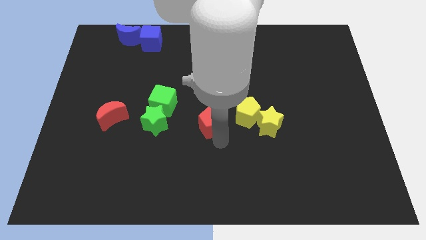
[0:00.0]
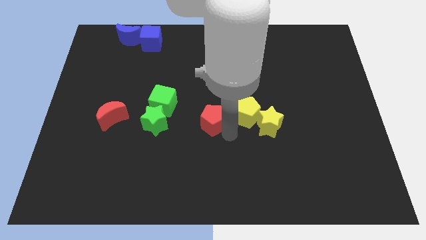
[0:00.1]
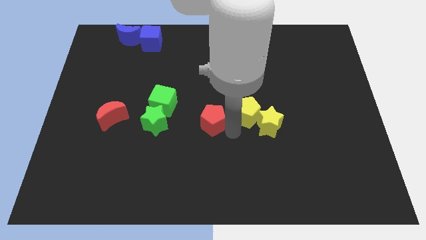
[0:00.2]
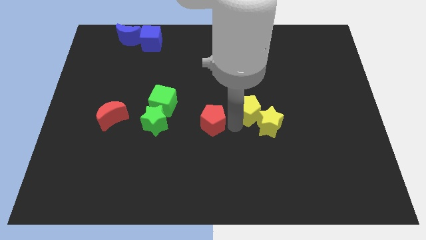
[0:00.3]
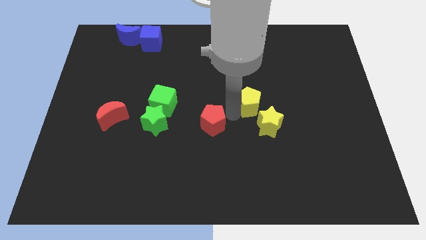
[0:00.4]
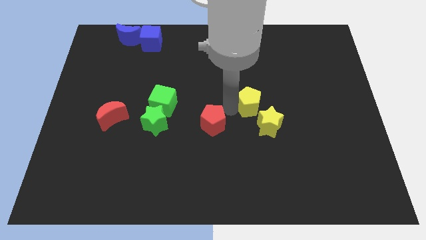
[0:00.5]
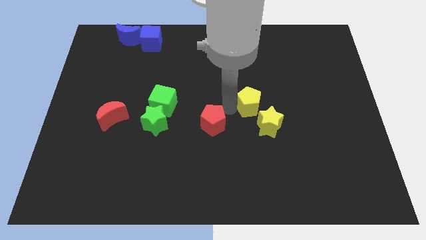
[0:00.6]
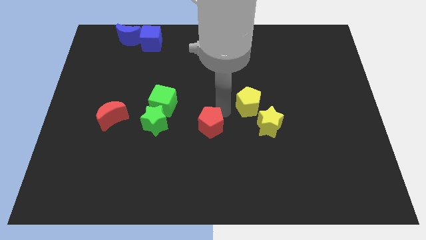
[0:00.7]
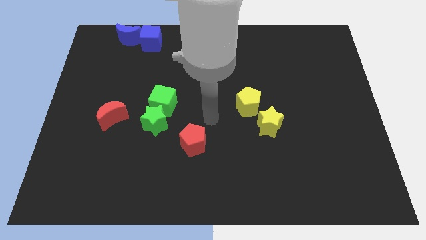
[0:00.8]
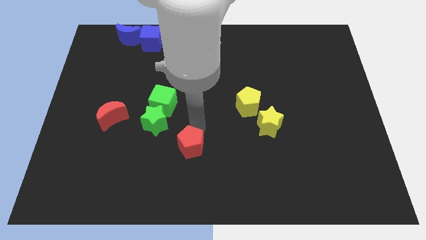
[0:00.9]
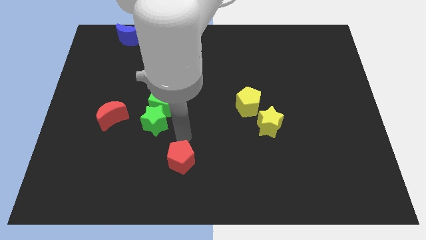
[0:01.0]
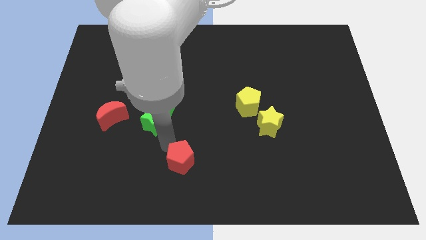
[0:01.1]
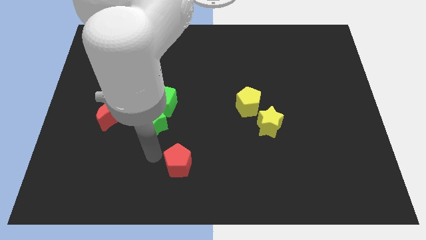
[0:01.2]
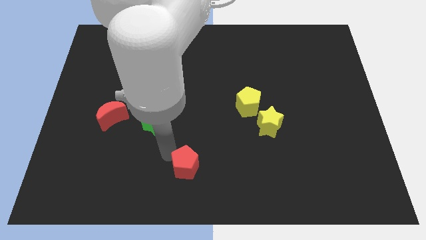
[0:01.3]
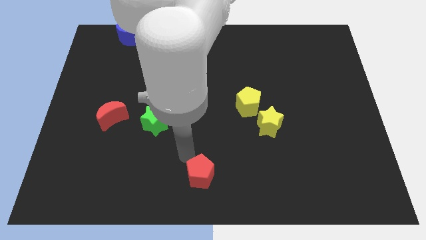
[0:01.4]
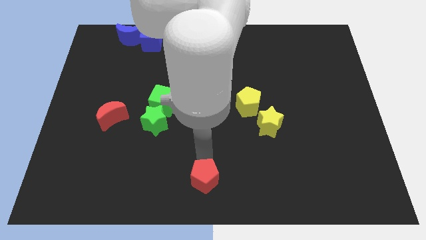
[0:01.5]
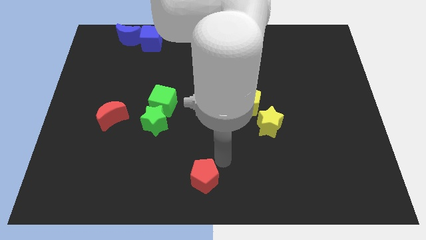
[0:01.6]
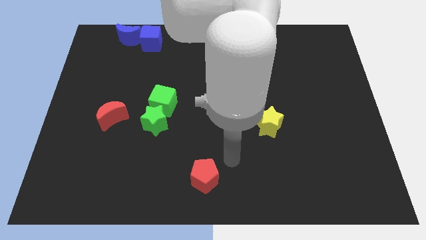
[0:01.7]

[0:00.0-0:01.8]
push the red pentagon towards the bottom center of the board

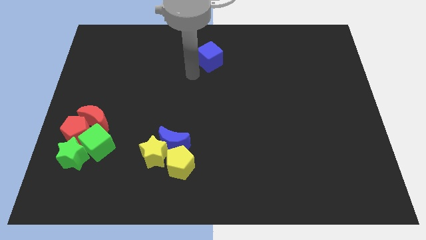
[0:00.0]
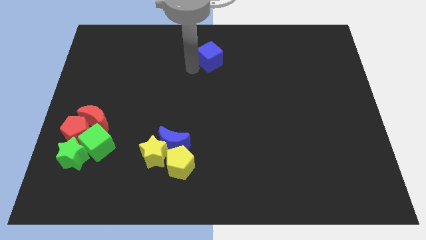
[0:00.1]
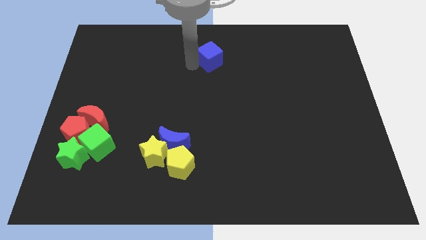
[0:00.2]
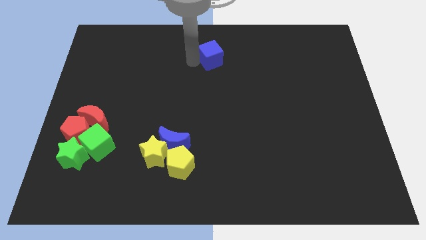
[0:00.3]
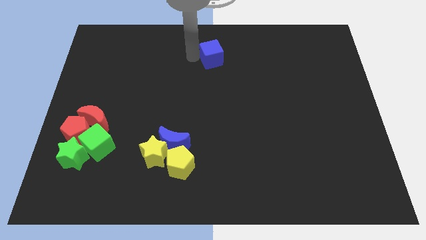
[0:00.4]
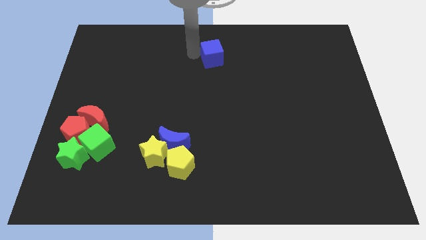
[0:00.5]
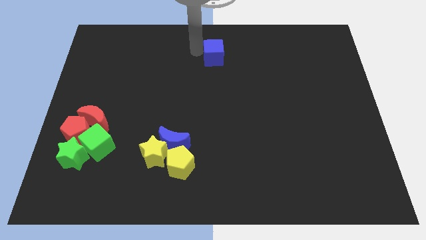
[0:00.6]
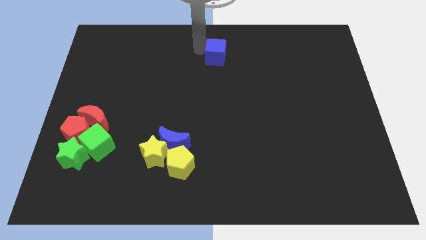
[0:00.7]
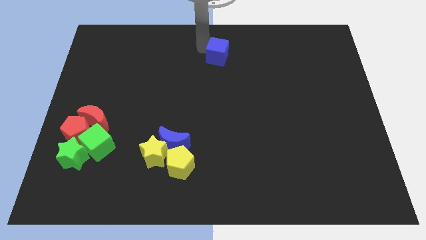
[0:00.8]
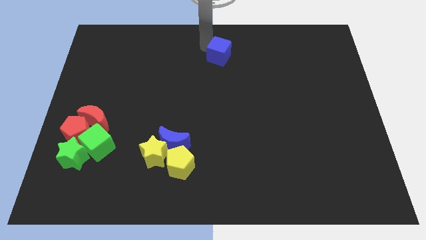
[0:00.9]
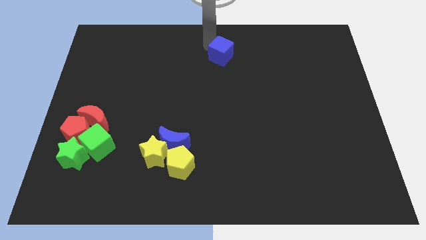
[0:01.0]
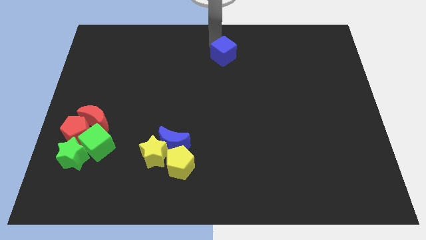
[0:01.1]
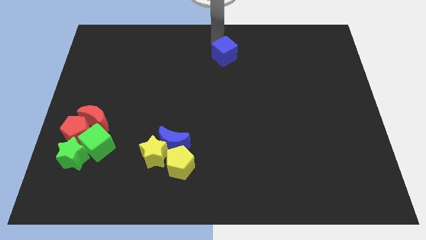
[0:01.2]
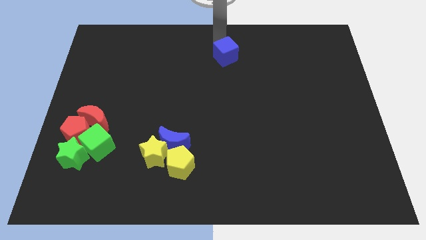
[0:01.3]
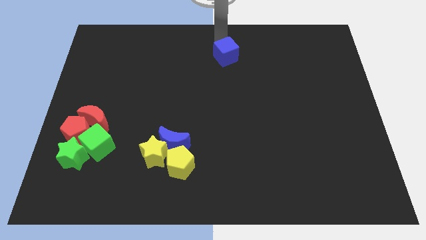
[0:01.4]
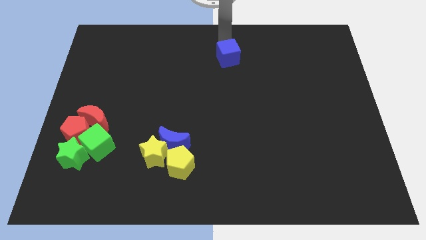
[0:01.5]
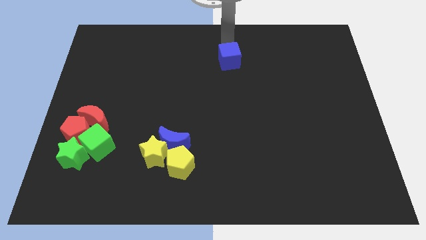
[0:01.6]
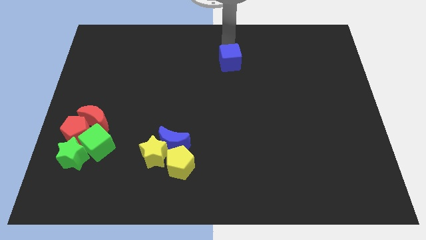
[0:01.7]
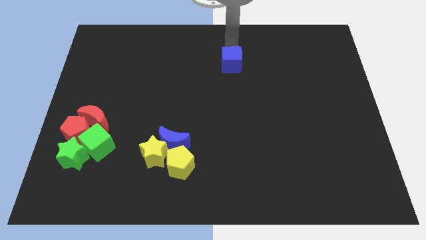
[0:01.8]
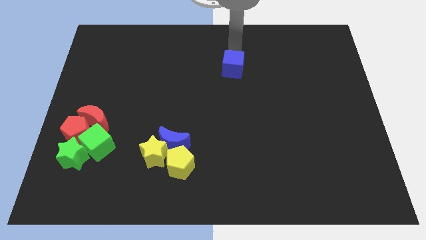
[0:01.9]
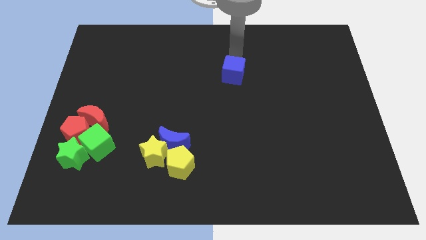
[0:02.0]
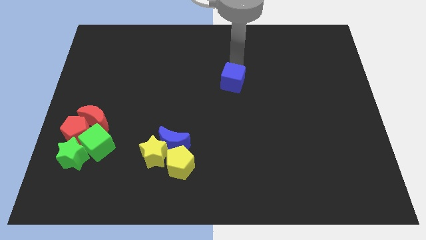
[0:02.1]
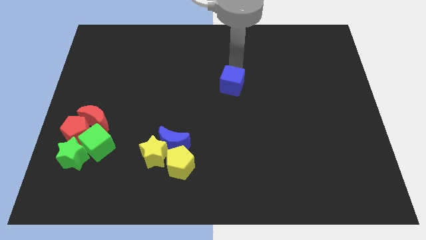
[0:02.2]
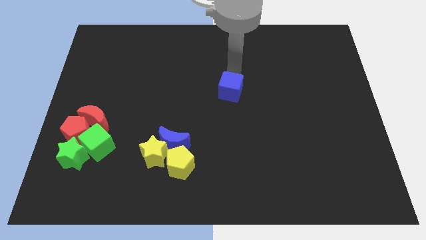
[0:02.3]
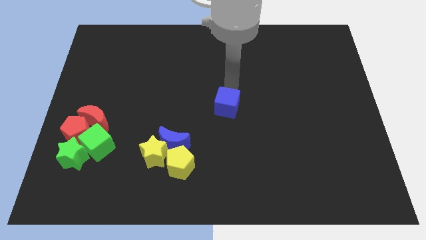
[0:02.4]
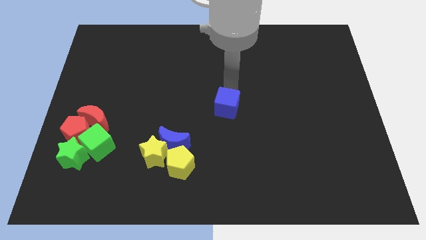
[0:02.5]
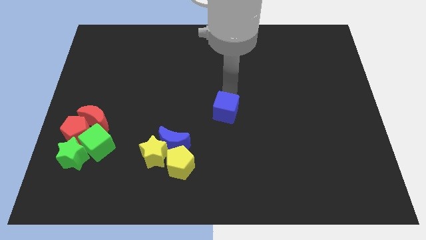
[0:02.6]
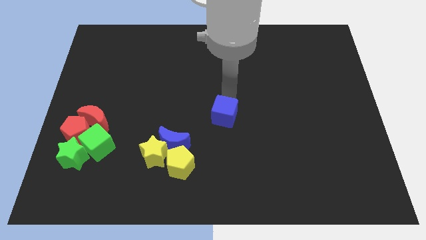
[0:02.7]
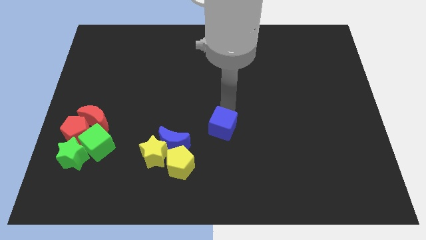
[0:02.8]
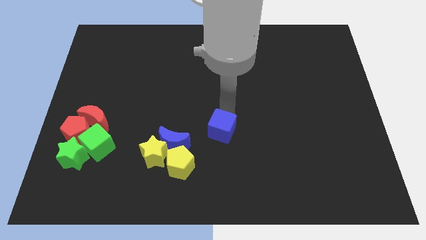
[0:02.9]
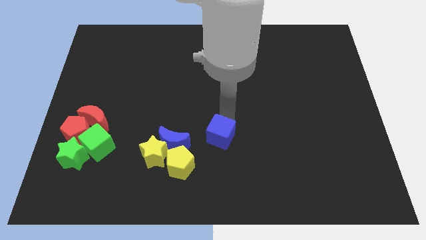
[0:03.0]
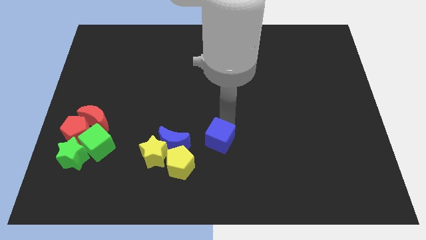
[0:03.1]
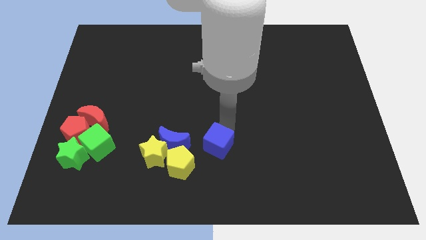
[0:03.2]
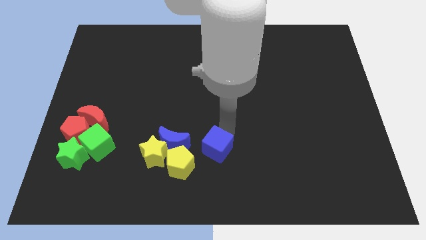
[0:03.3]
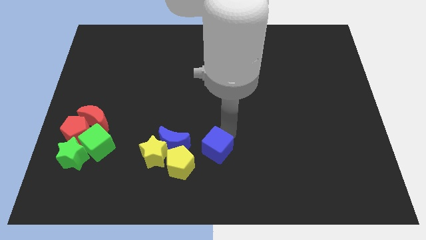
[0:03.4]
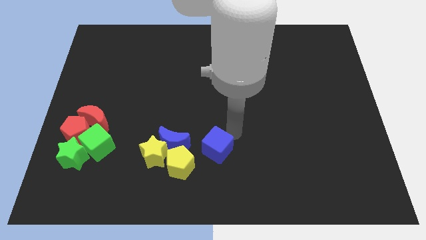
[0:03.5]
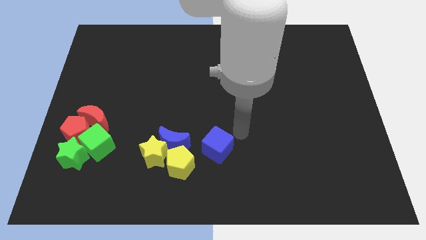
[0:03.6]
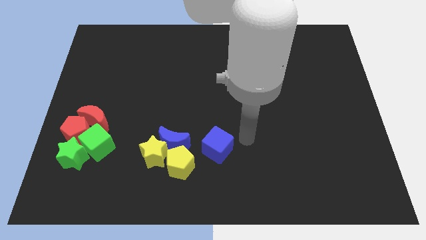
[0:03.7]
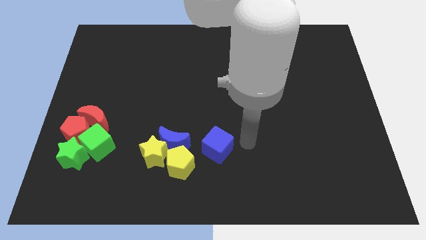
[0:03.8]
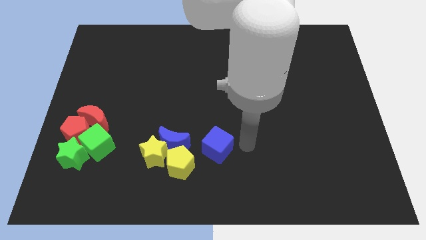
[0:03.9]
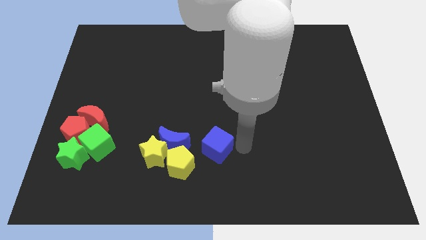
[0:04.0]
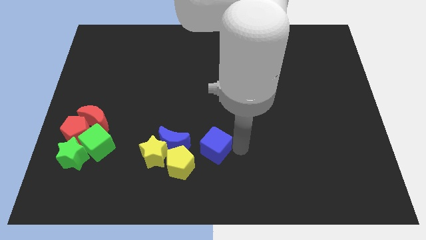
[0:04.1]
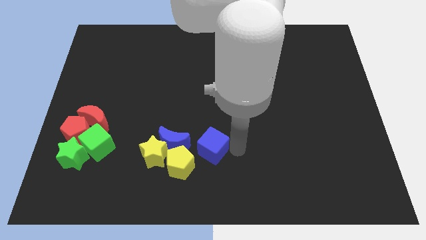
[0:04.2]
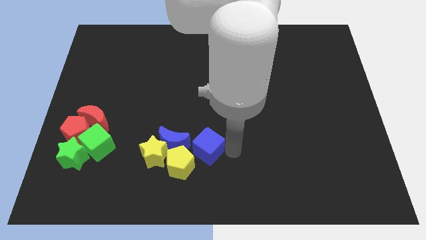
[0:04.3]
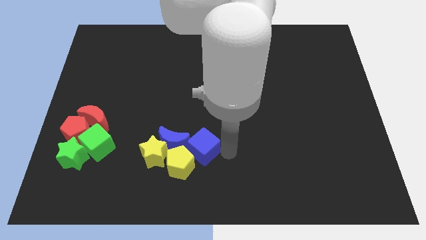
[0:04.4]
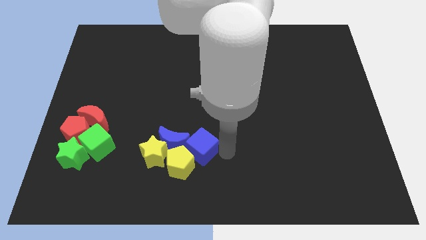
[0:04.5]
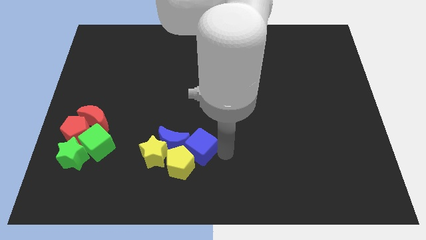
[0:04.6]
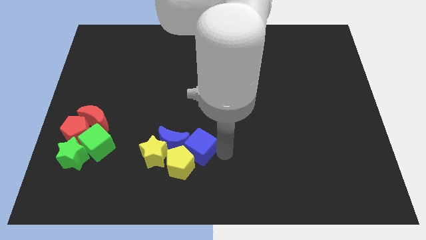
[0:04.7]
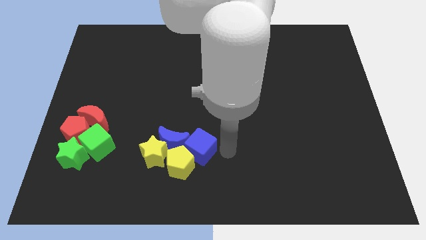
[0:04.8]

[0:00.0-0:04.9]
move the blue cube to the right side of the blue crescent

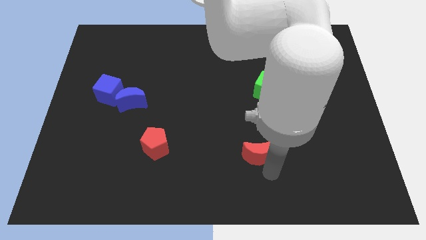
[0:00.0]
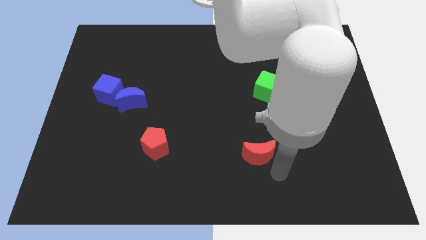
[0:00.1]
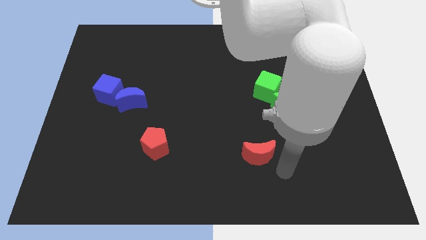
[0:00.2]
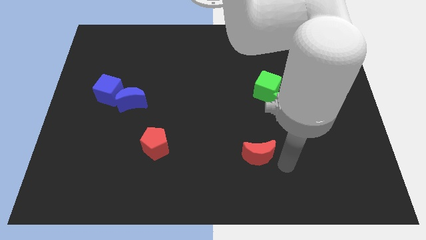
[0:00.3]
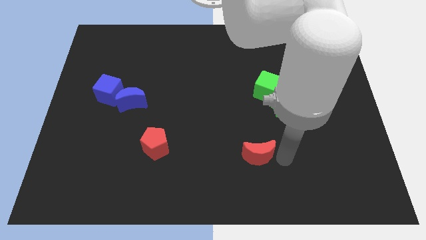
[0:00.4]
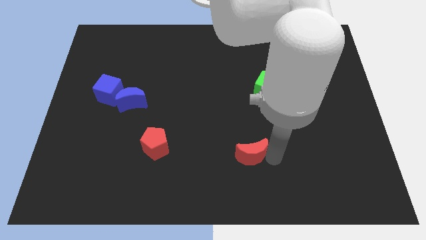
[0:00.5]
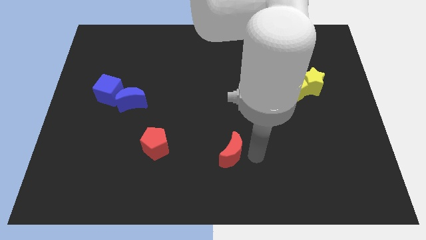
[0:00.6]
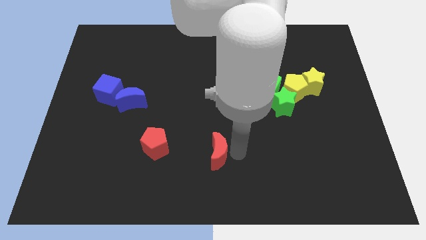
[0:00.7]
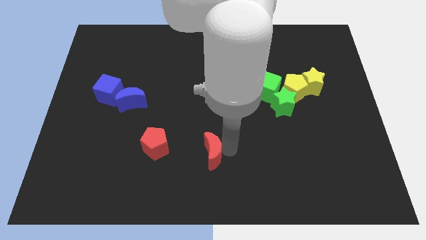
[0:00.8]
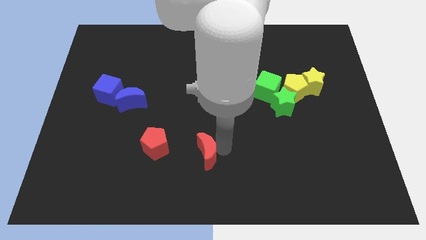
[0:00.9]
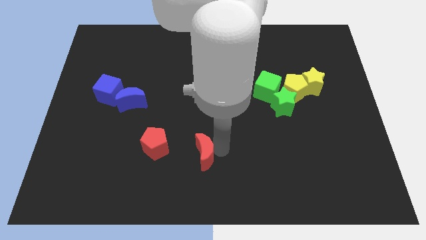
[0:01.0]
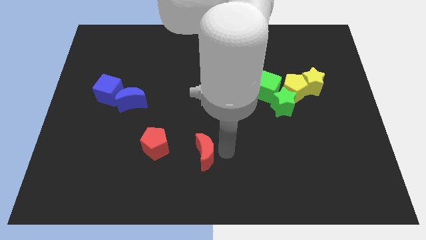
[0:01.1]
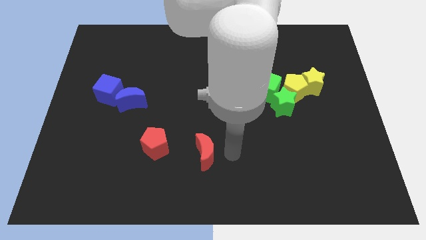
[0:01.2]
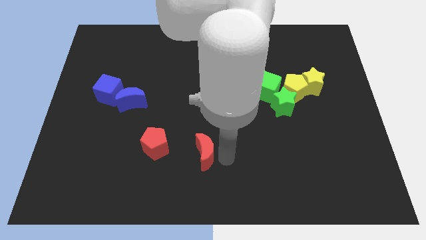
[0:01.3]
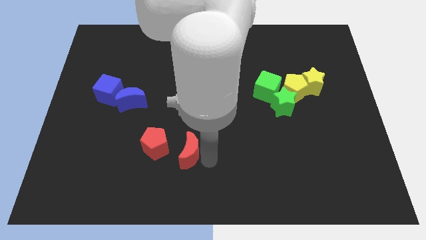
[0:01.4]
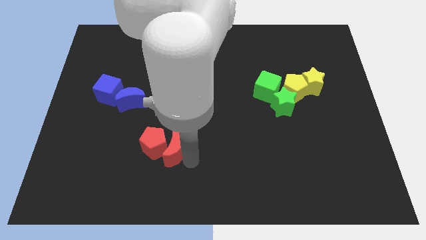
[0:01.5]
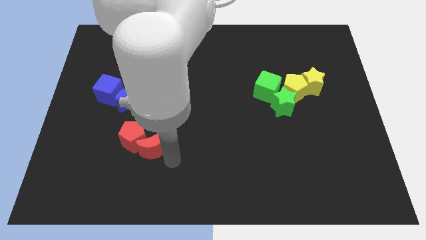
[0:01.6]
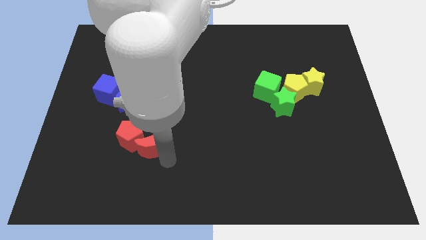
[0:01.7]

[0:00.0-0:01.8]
push the red crescent into the red pentagon from right

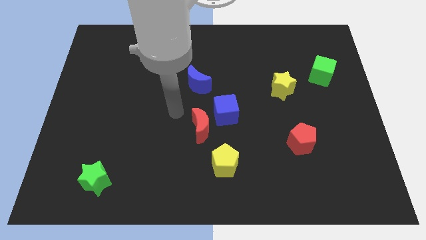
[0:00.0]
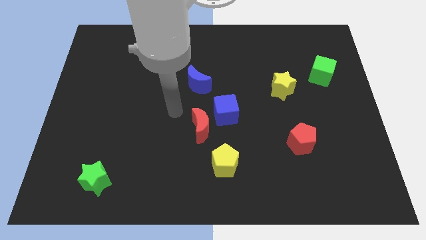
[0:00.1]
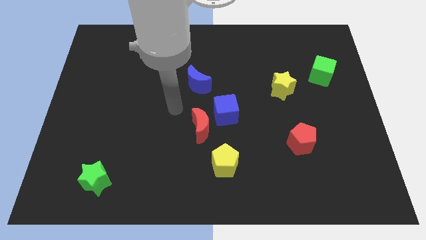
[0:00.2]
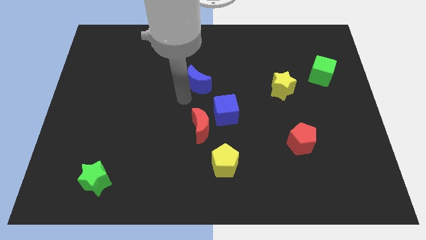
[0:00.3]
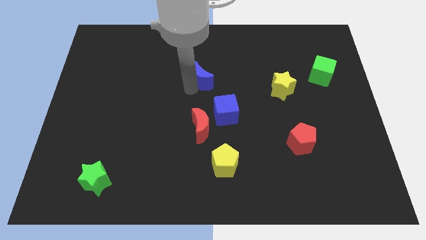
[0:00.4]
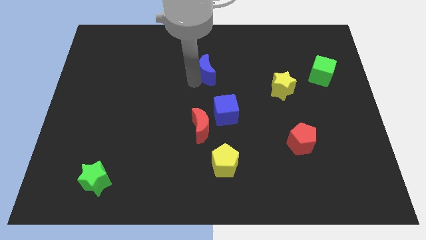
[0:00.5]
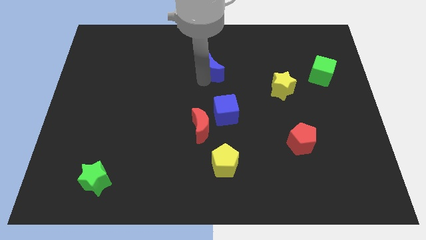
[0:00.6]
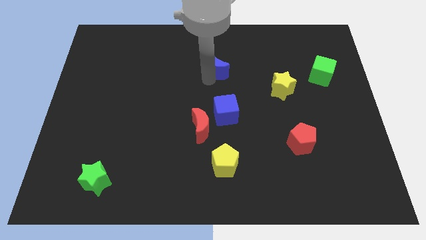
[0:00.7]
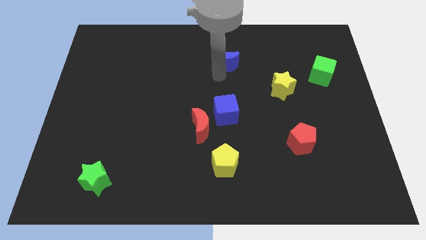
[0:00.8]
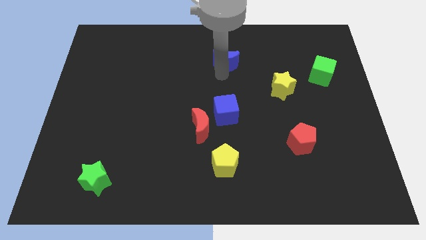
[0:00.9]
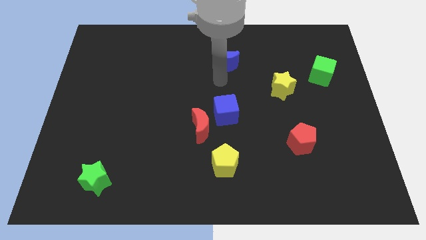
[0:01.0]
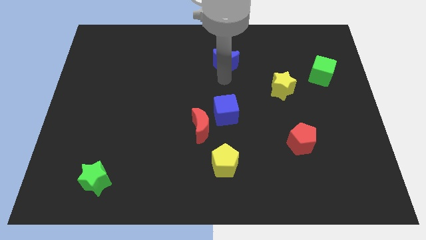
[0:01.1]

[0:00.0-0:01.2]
place the blue moon vertically above the blue cube
